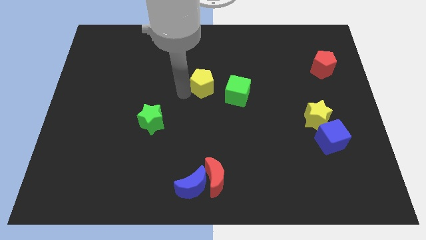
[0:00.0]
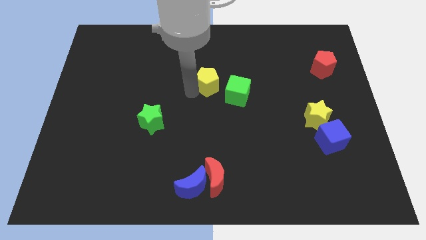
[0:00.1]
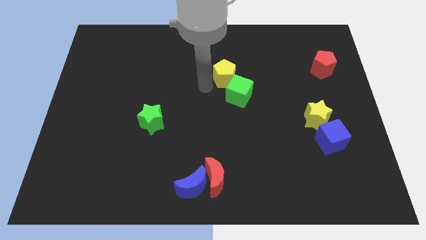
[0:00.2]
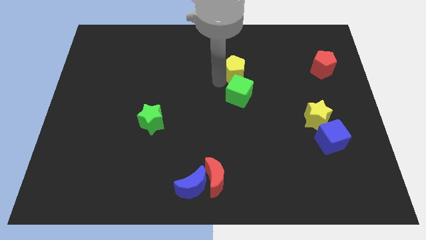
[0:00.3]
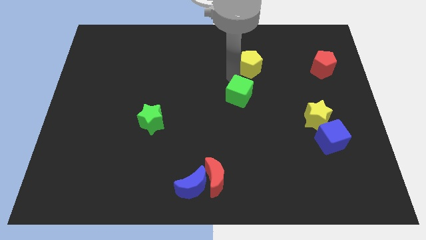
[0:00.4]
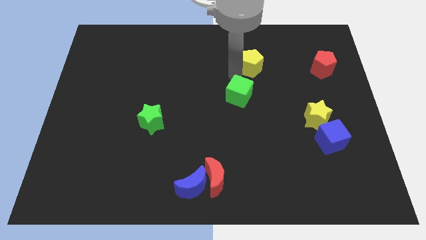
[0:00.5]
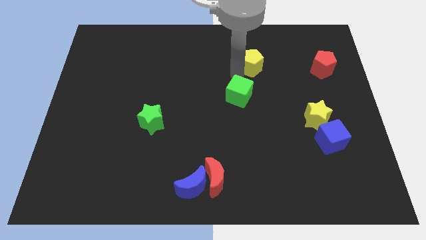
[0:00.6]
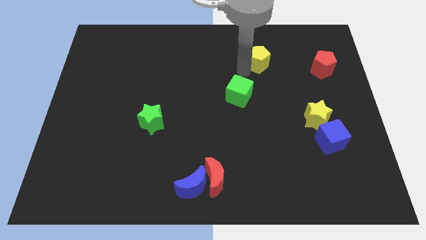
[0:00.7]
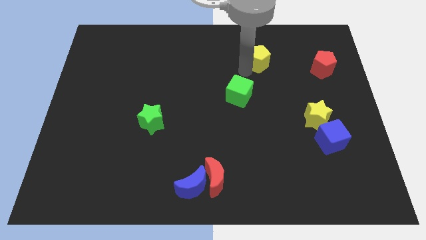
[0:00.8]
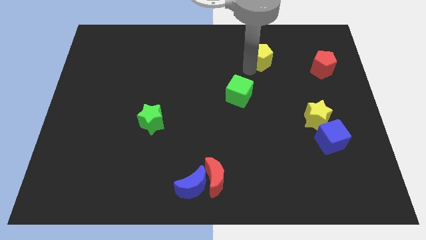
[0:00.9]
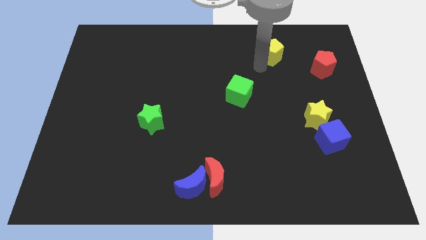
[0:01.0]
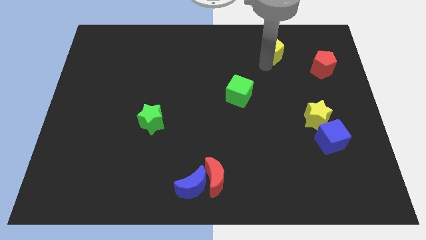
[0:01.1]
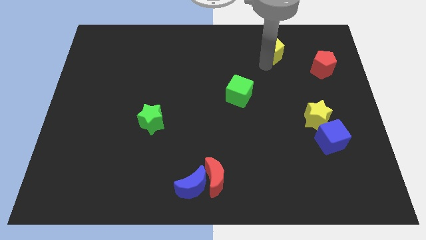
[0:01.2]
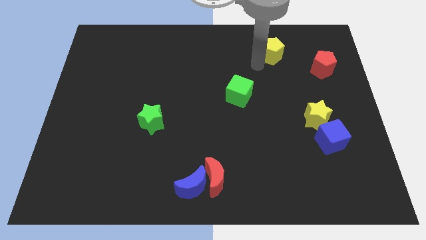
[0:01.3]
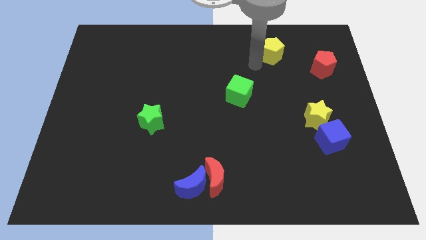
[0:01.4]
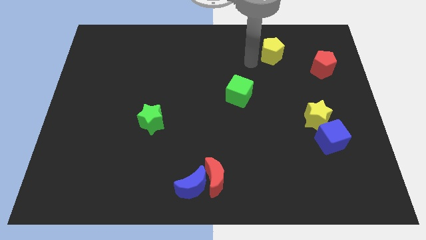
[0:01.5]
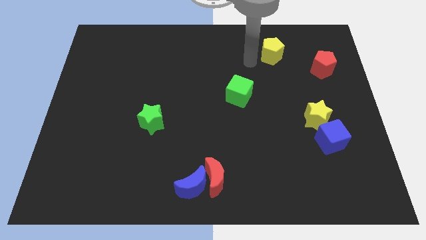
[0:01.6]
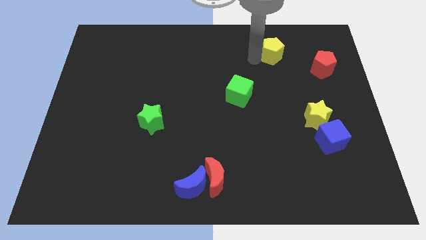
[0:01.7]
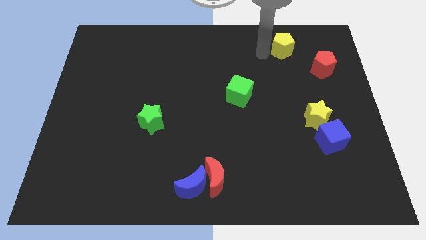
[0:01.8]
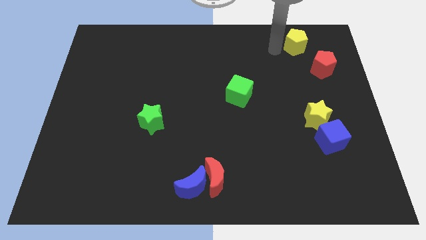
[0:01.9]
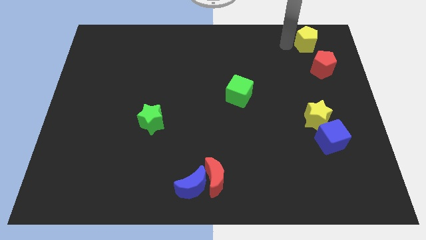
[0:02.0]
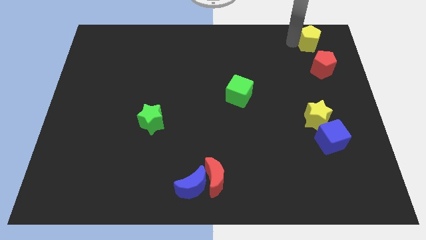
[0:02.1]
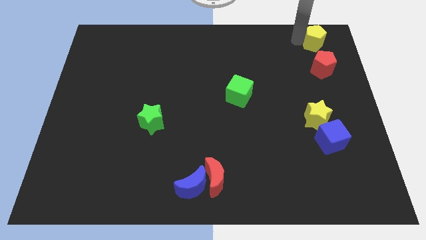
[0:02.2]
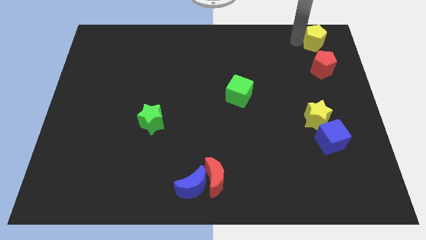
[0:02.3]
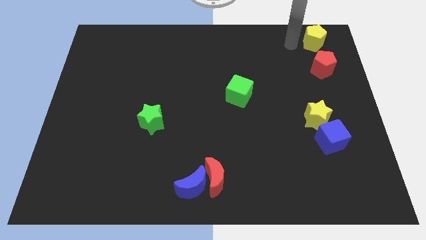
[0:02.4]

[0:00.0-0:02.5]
push the yellow pentagon towards top right of the board

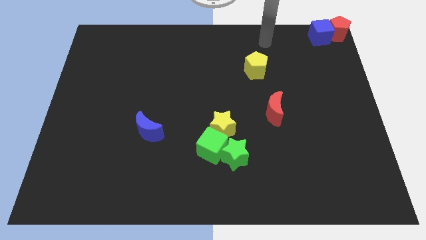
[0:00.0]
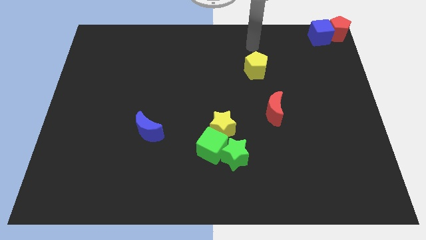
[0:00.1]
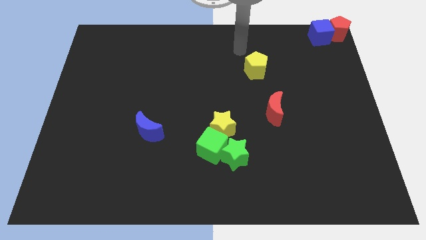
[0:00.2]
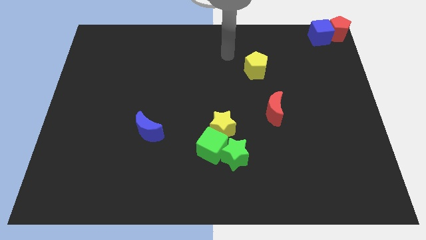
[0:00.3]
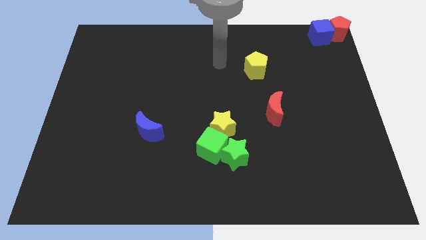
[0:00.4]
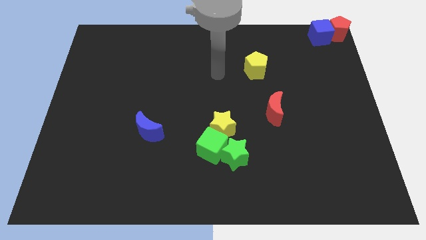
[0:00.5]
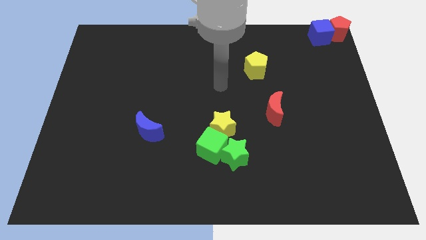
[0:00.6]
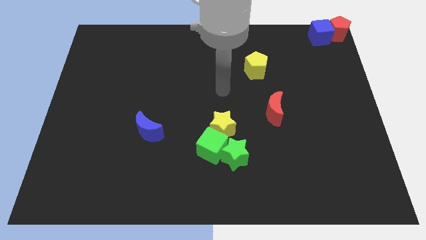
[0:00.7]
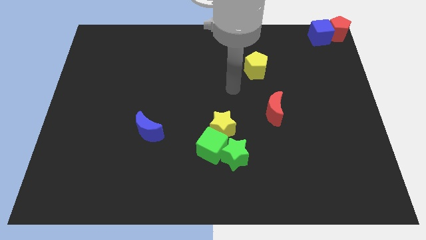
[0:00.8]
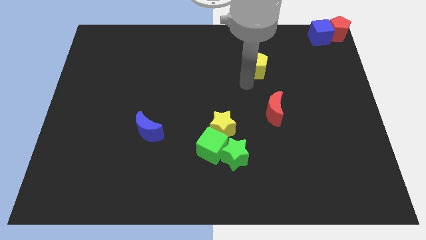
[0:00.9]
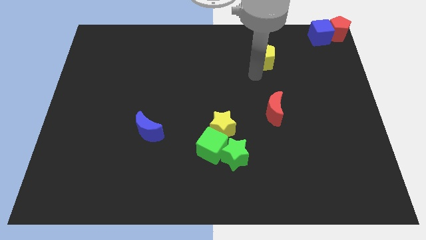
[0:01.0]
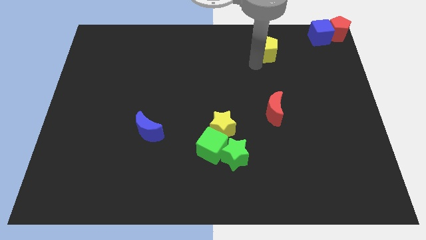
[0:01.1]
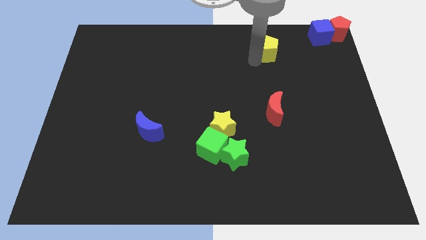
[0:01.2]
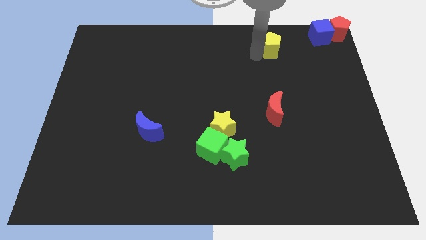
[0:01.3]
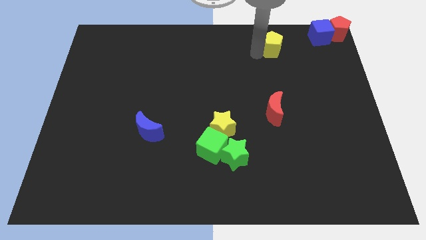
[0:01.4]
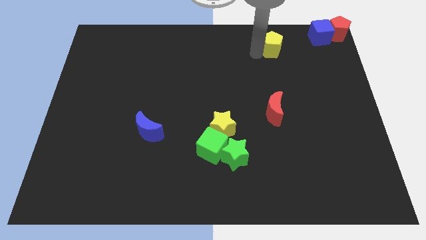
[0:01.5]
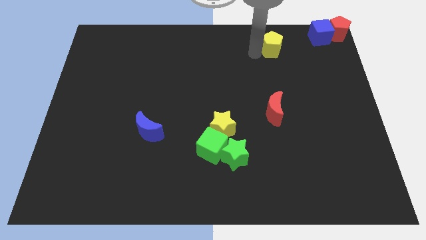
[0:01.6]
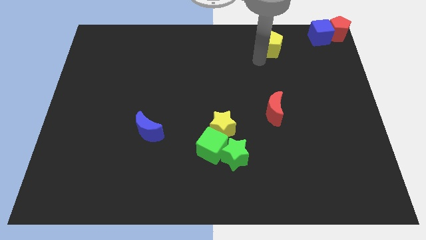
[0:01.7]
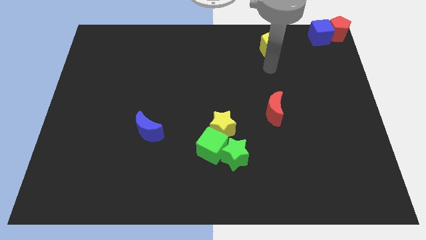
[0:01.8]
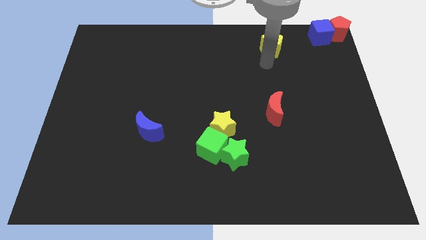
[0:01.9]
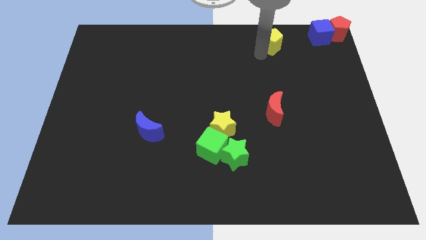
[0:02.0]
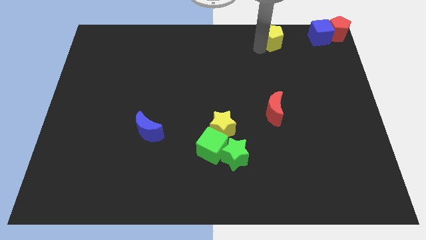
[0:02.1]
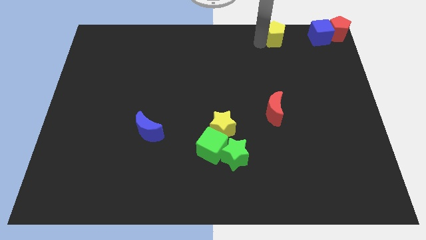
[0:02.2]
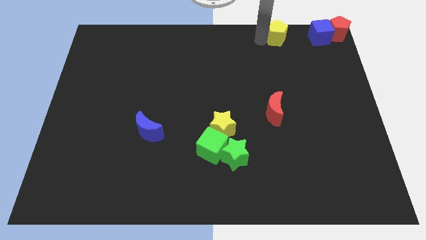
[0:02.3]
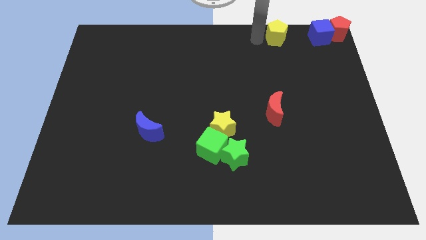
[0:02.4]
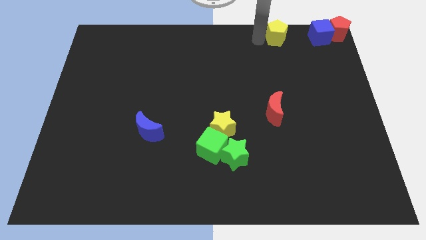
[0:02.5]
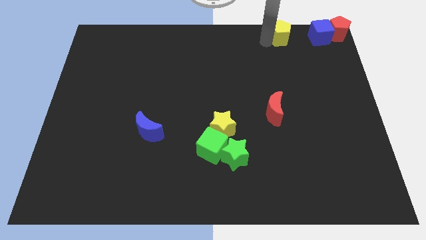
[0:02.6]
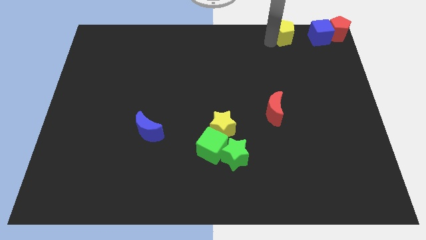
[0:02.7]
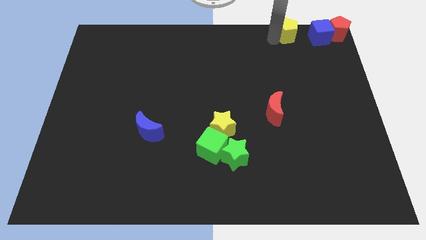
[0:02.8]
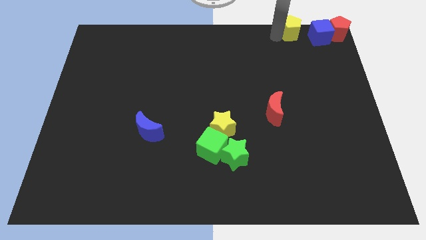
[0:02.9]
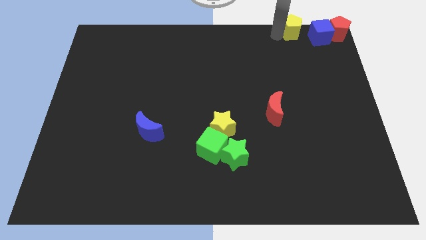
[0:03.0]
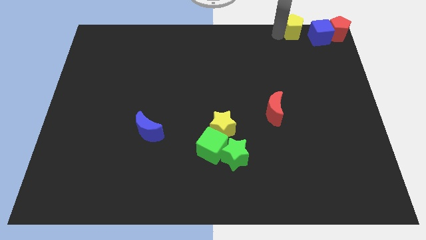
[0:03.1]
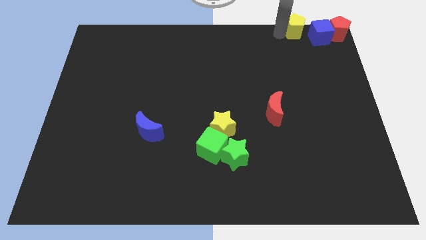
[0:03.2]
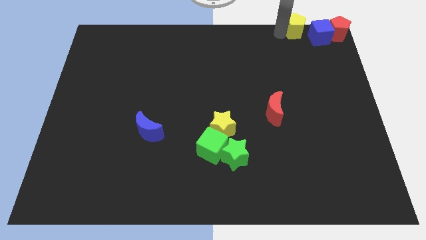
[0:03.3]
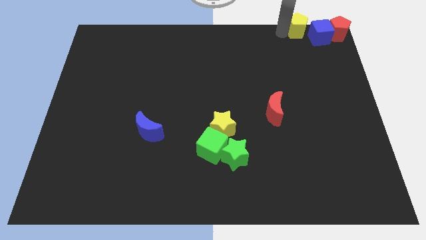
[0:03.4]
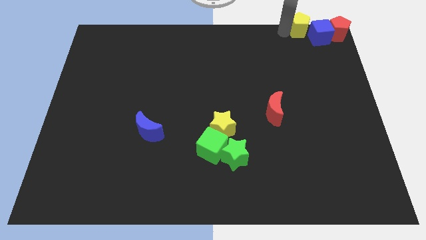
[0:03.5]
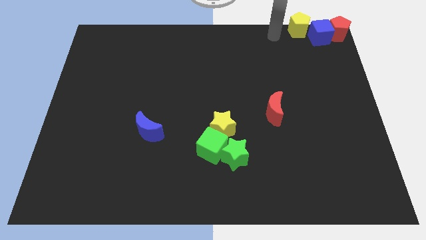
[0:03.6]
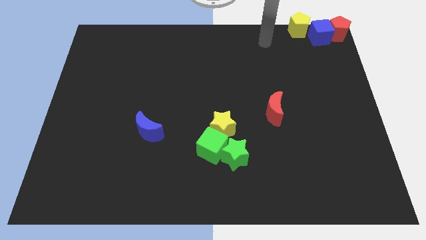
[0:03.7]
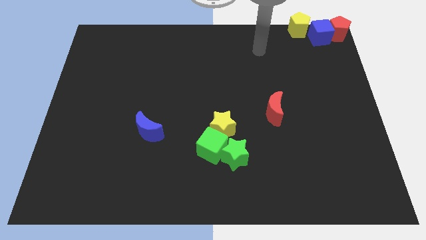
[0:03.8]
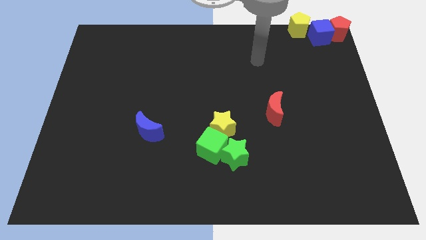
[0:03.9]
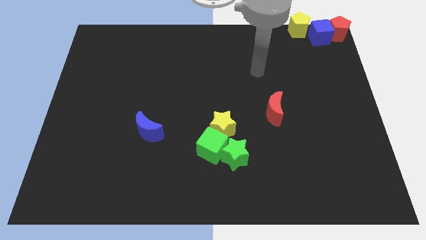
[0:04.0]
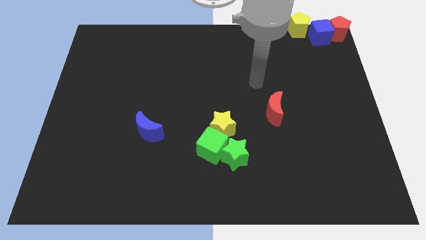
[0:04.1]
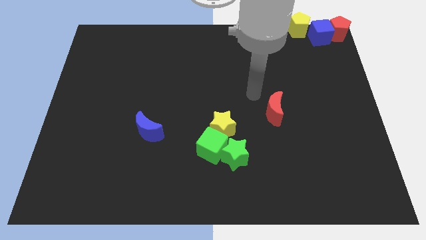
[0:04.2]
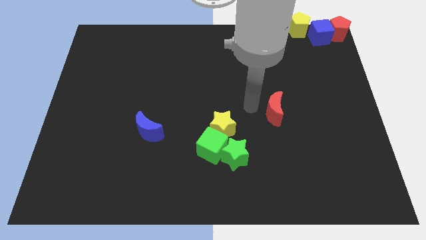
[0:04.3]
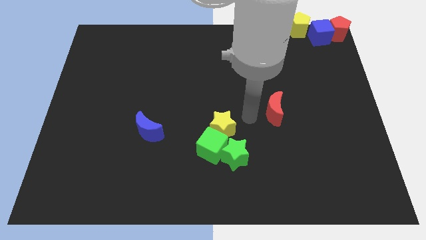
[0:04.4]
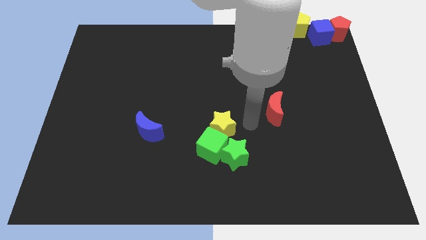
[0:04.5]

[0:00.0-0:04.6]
move the yellow pentagon close to the blue cube

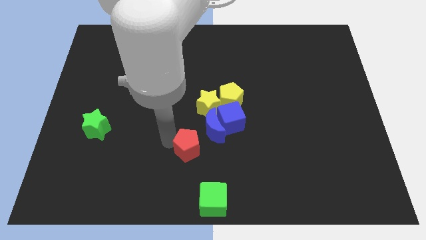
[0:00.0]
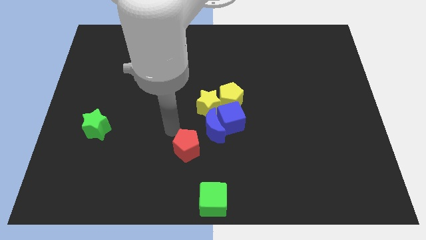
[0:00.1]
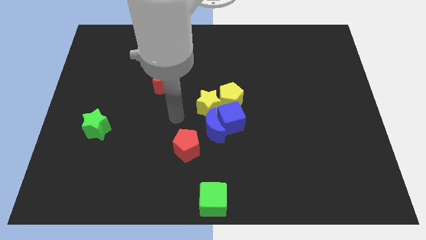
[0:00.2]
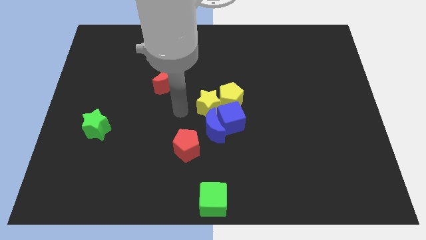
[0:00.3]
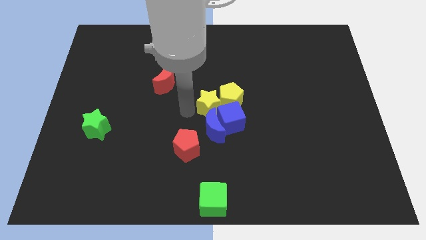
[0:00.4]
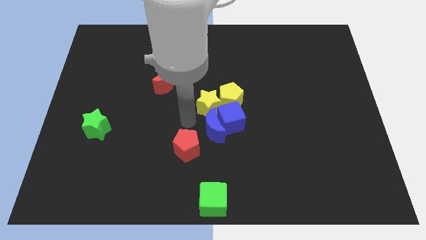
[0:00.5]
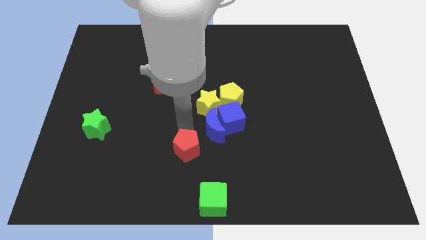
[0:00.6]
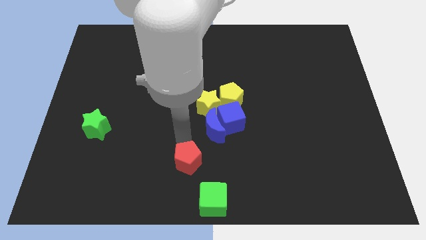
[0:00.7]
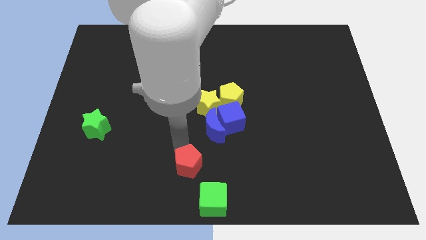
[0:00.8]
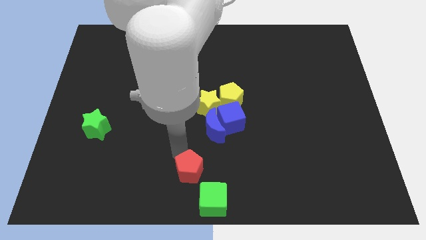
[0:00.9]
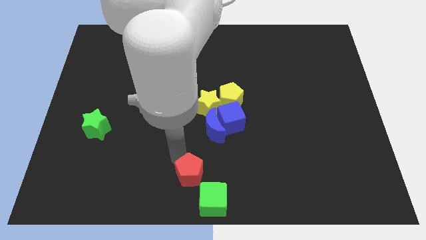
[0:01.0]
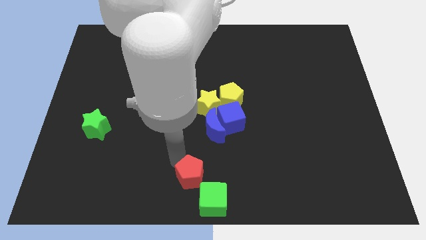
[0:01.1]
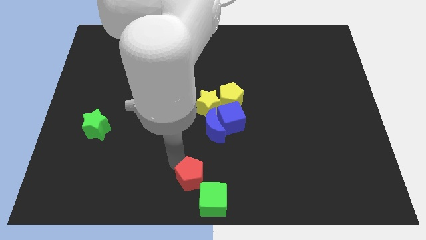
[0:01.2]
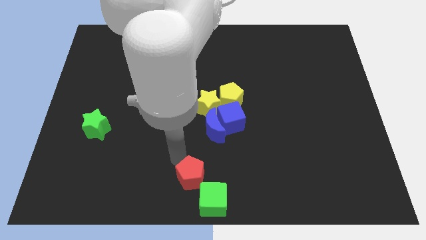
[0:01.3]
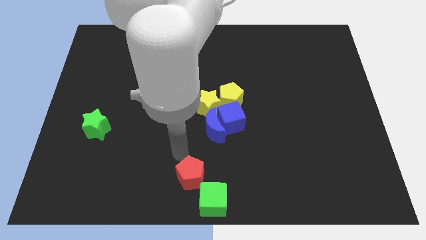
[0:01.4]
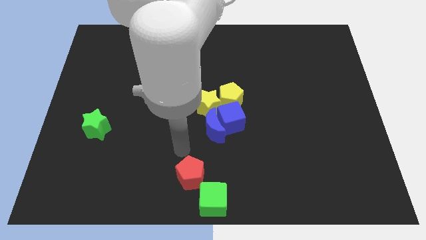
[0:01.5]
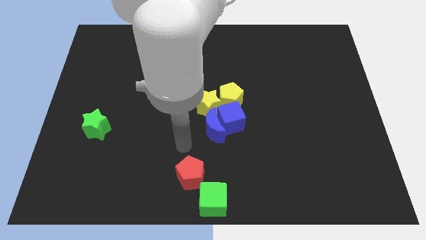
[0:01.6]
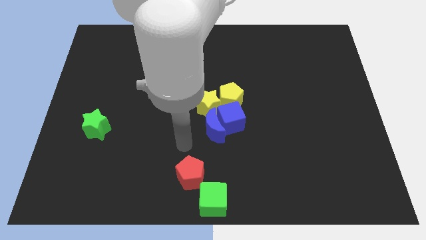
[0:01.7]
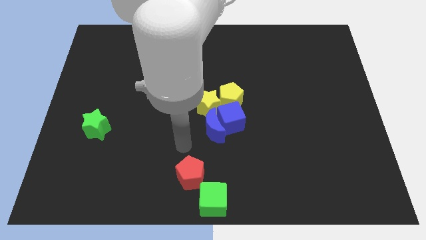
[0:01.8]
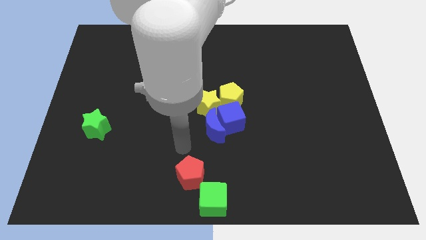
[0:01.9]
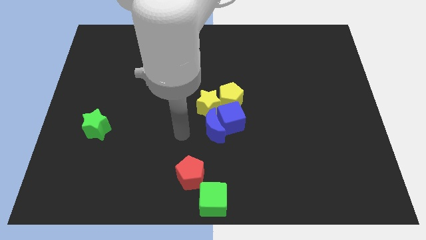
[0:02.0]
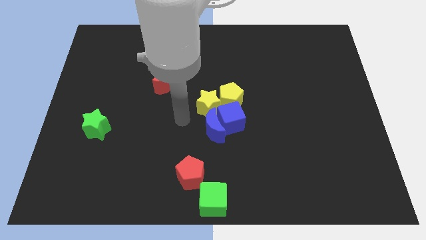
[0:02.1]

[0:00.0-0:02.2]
slide the red pentagon at the top left side of the green cube
